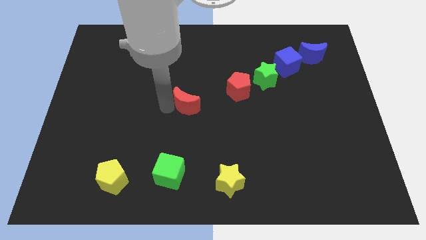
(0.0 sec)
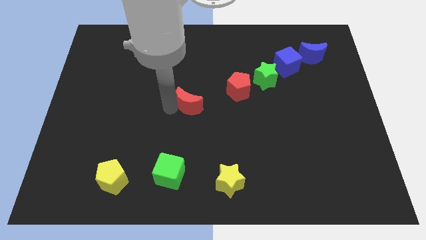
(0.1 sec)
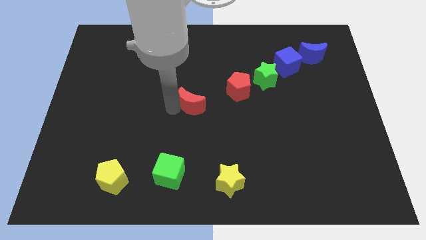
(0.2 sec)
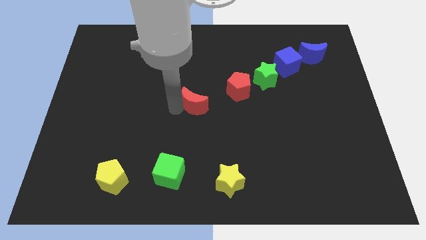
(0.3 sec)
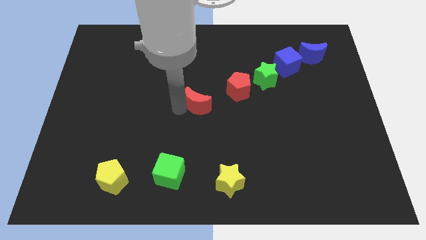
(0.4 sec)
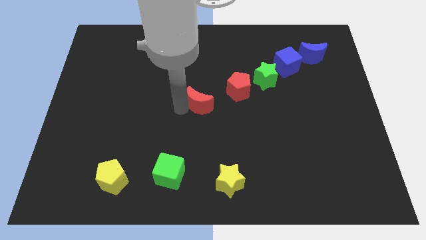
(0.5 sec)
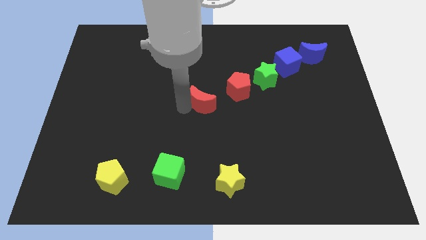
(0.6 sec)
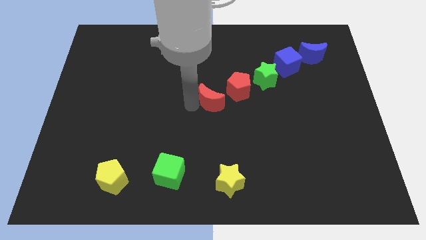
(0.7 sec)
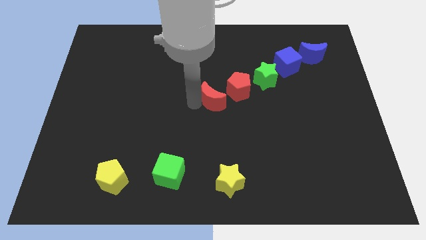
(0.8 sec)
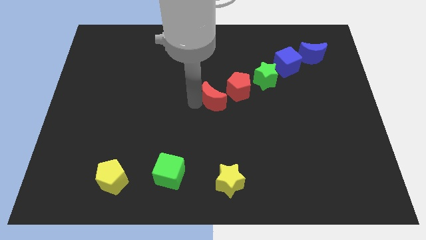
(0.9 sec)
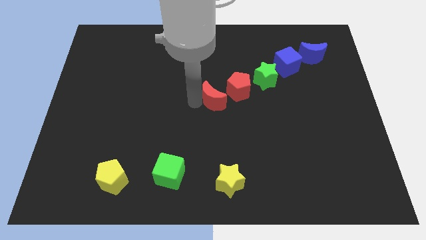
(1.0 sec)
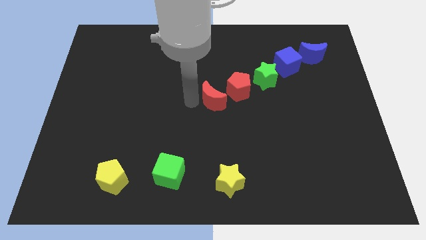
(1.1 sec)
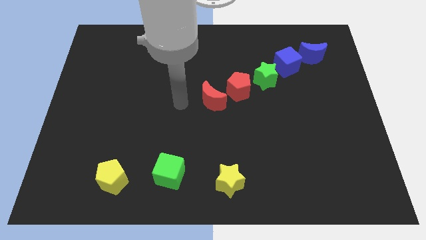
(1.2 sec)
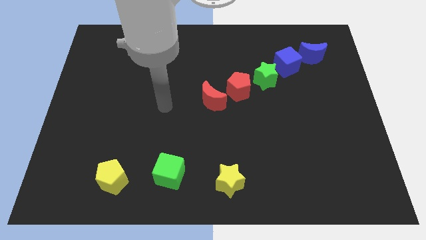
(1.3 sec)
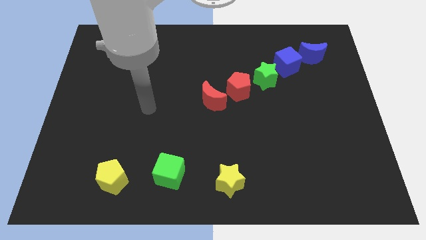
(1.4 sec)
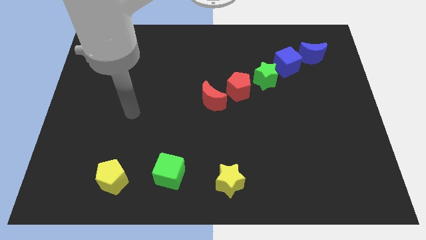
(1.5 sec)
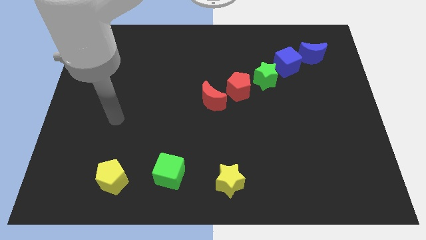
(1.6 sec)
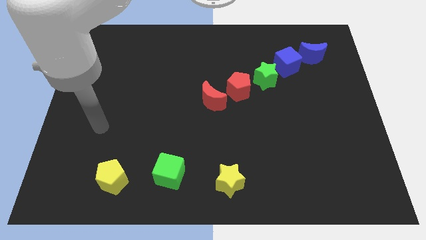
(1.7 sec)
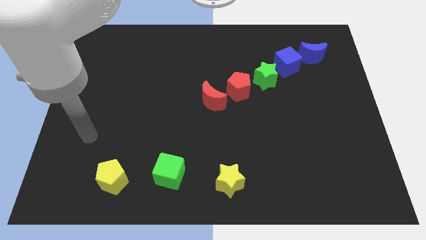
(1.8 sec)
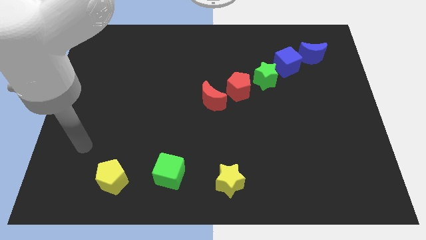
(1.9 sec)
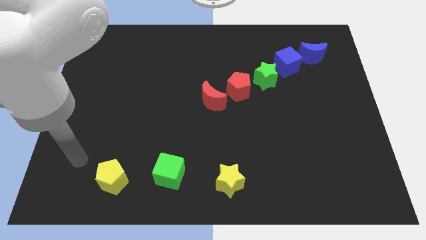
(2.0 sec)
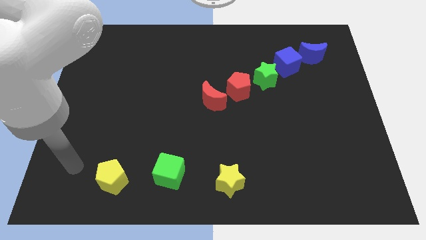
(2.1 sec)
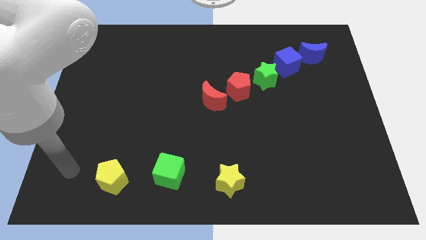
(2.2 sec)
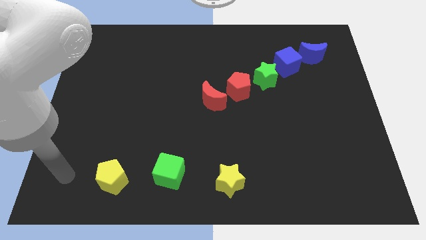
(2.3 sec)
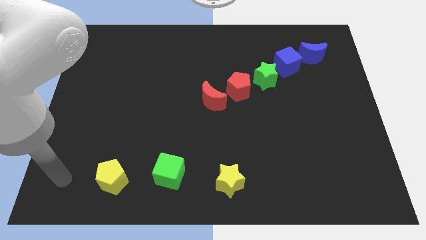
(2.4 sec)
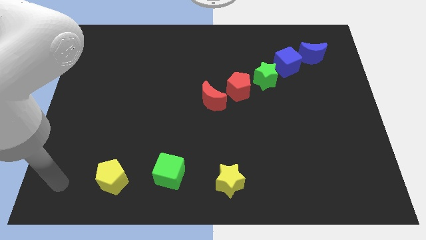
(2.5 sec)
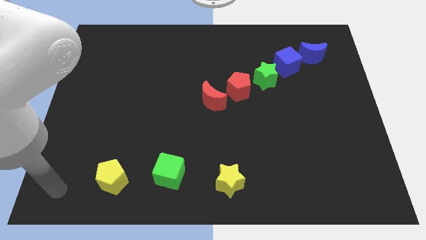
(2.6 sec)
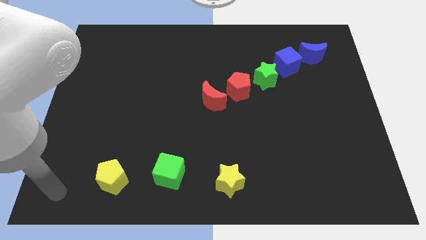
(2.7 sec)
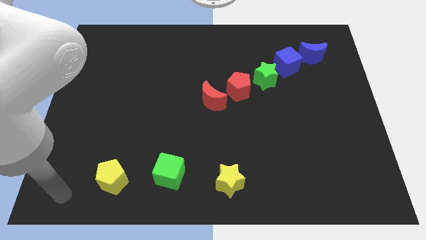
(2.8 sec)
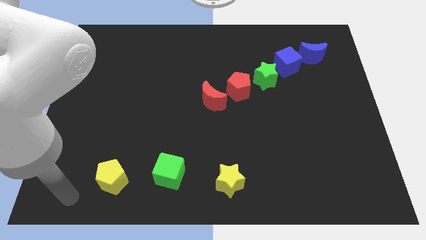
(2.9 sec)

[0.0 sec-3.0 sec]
place the red moon diagonally top right to yellow pentagon

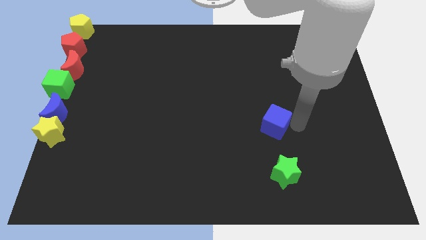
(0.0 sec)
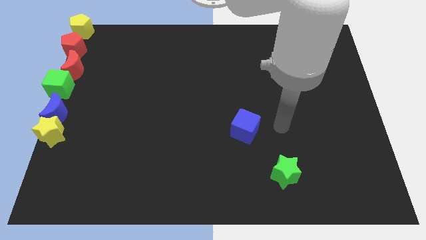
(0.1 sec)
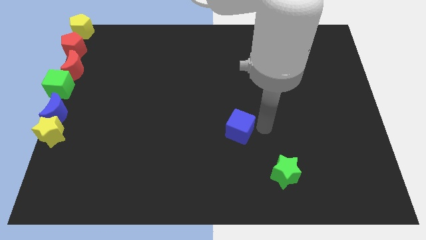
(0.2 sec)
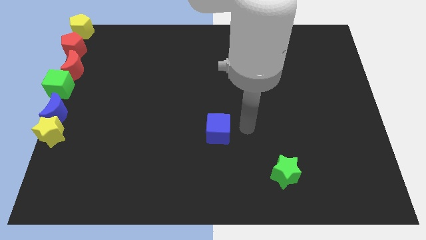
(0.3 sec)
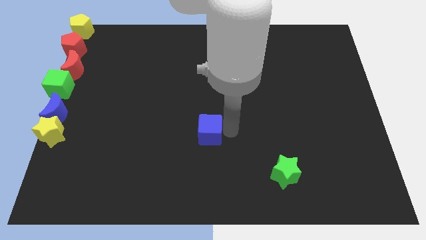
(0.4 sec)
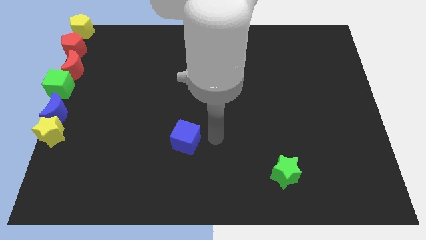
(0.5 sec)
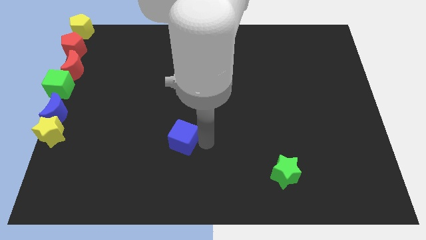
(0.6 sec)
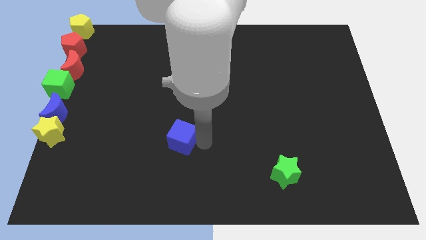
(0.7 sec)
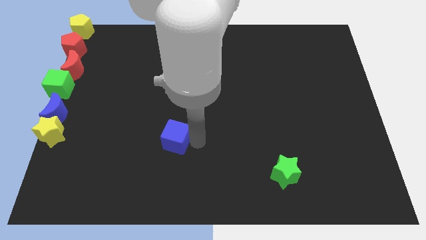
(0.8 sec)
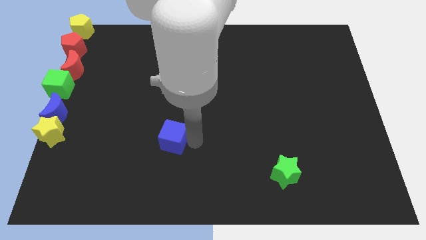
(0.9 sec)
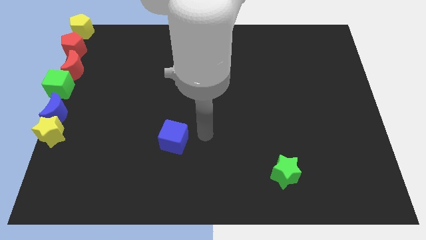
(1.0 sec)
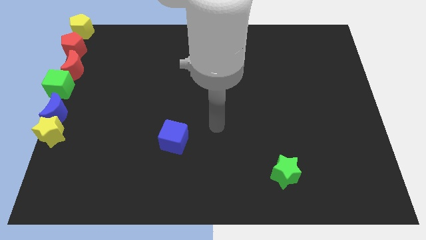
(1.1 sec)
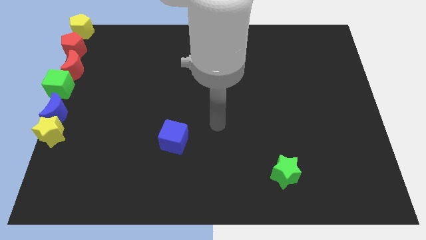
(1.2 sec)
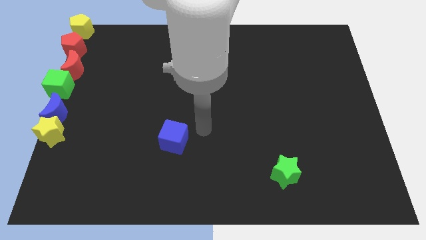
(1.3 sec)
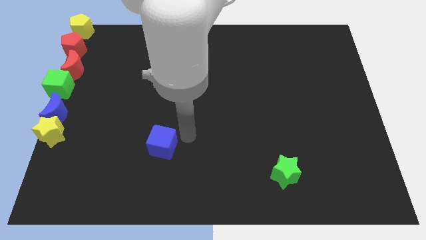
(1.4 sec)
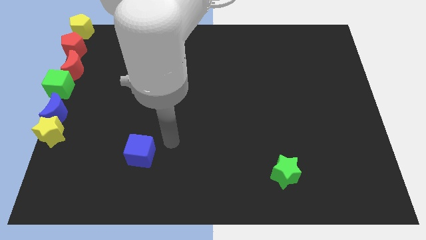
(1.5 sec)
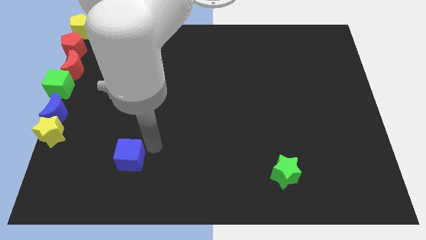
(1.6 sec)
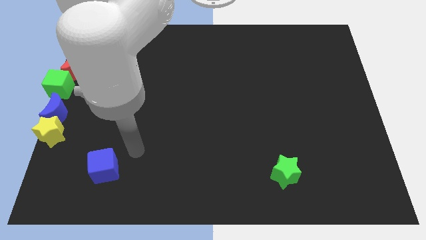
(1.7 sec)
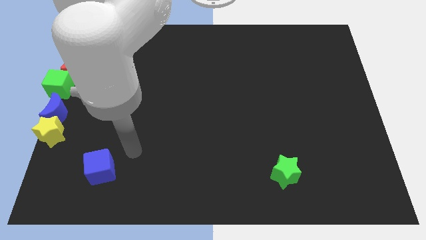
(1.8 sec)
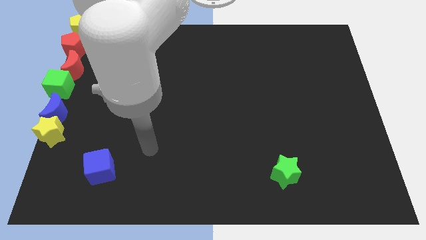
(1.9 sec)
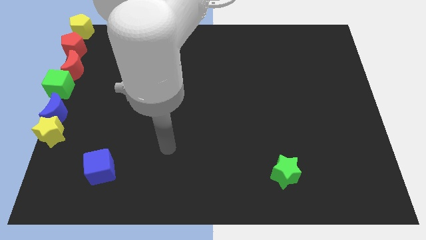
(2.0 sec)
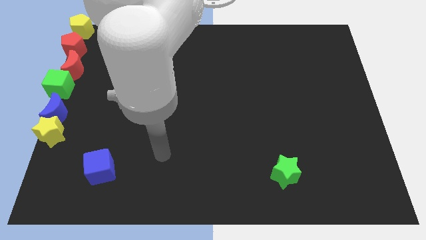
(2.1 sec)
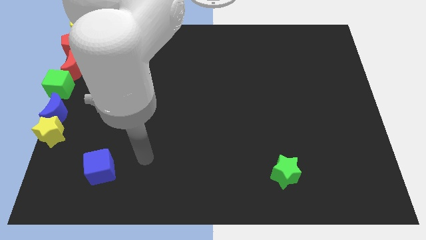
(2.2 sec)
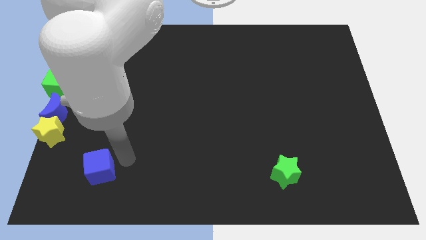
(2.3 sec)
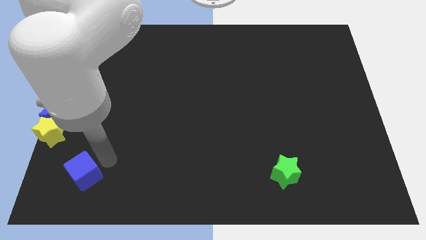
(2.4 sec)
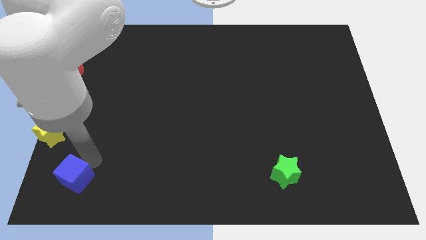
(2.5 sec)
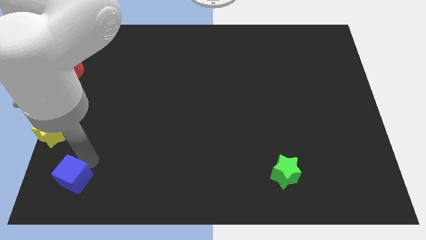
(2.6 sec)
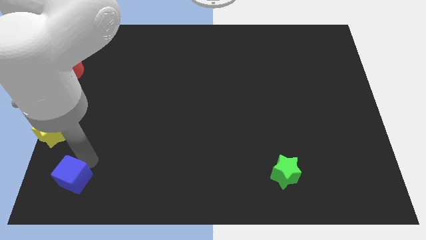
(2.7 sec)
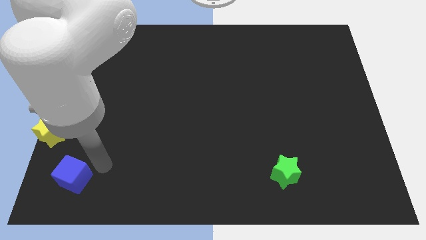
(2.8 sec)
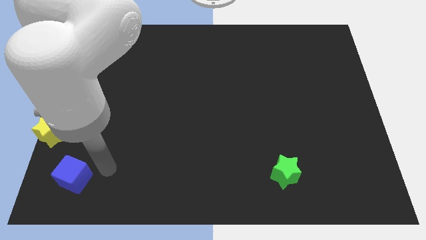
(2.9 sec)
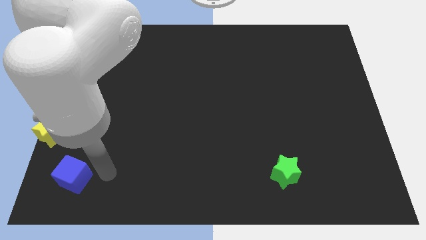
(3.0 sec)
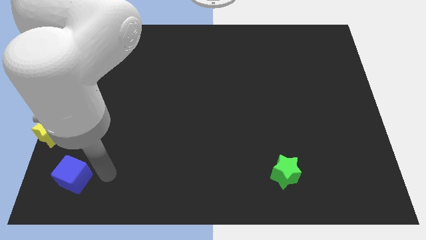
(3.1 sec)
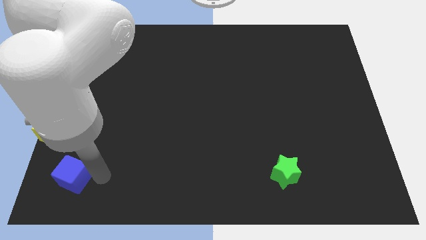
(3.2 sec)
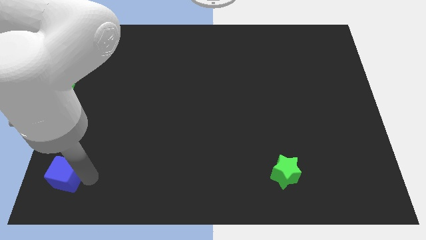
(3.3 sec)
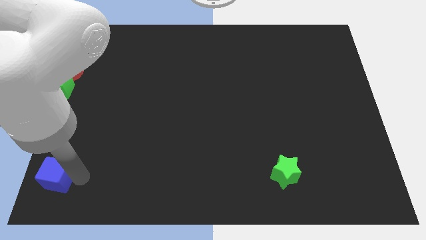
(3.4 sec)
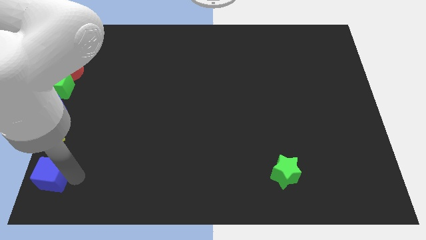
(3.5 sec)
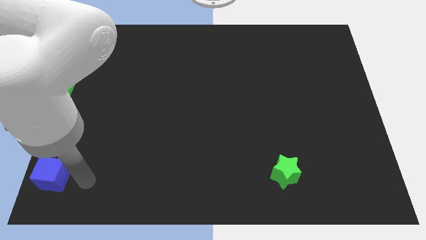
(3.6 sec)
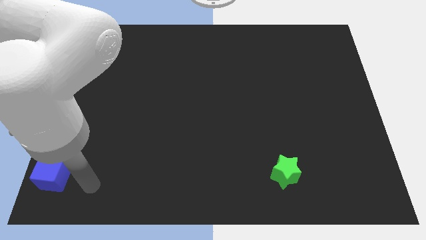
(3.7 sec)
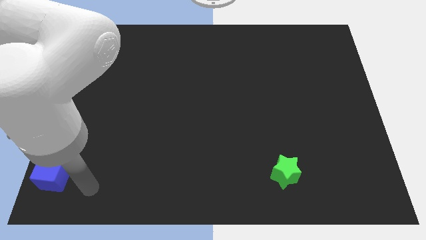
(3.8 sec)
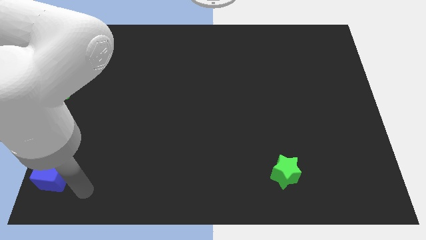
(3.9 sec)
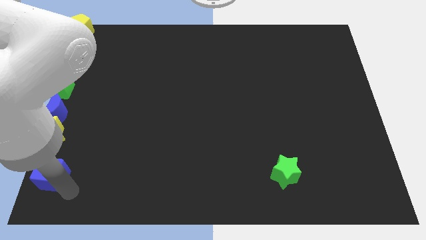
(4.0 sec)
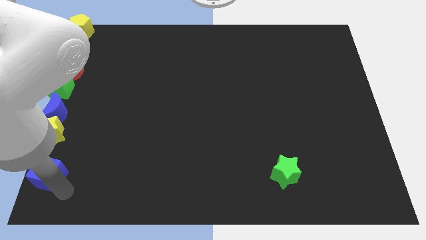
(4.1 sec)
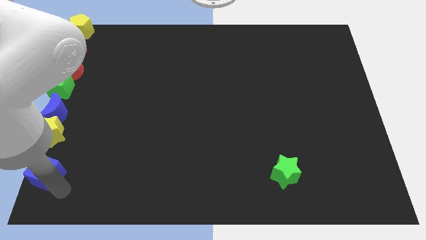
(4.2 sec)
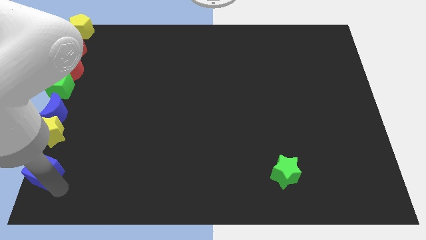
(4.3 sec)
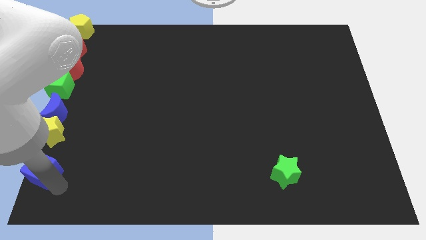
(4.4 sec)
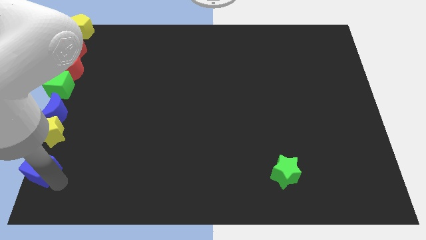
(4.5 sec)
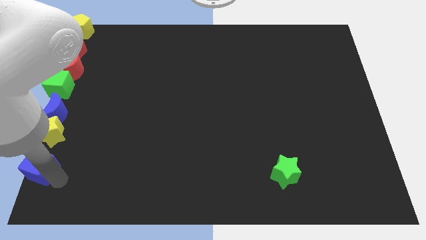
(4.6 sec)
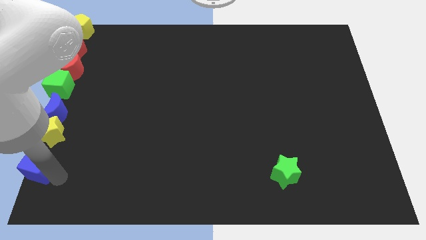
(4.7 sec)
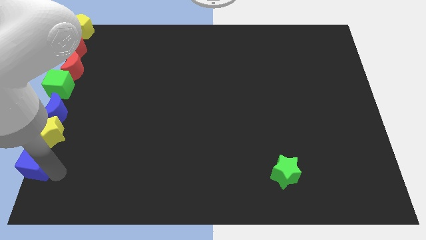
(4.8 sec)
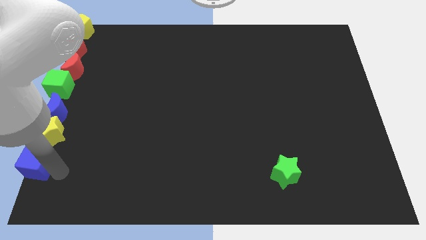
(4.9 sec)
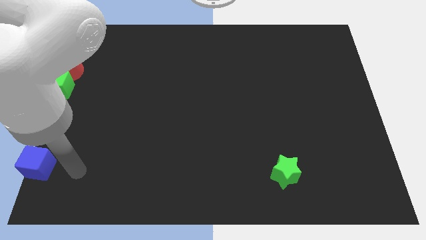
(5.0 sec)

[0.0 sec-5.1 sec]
move the blue cube below the yellow star

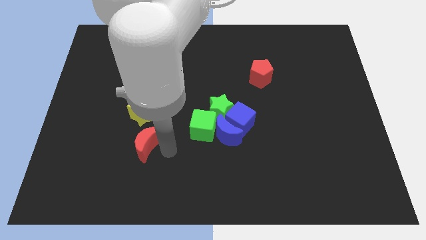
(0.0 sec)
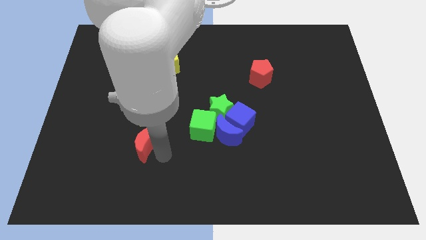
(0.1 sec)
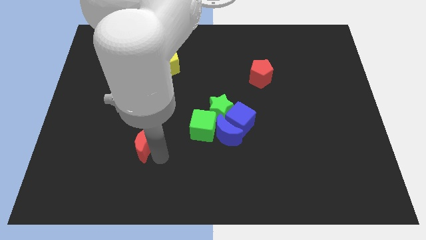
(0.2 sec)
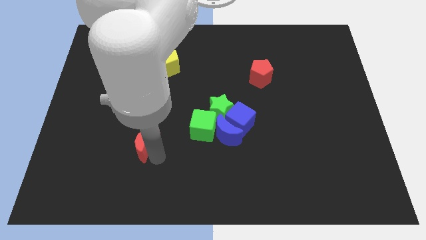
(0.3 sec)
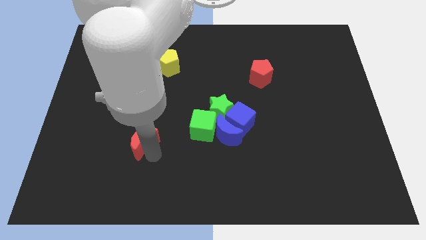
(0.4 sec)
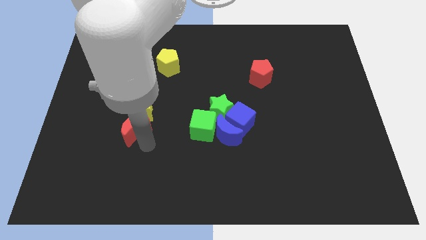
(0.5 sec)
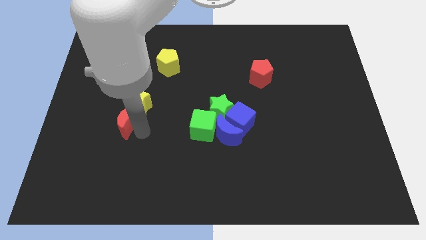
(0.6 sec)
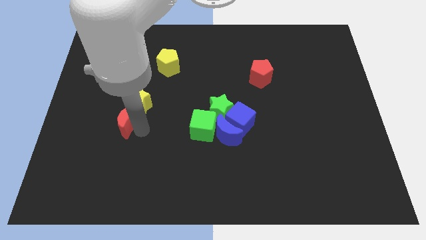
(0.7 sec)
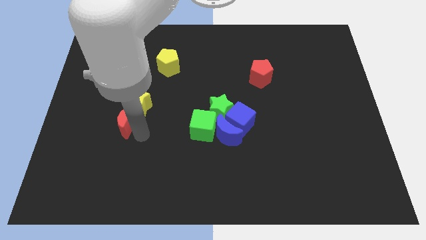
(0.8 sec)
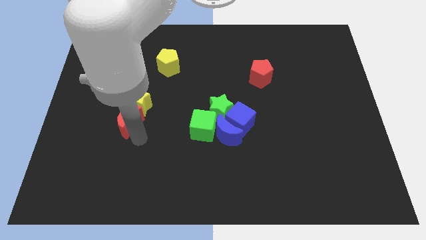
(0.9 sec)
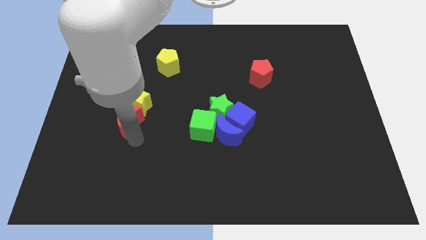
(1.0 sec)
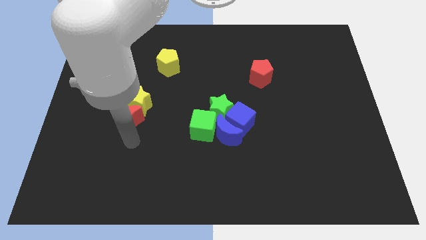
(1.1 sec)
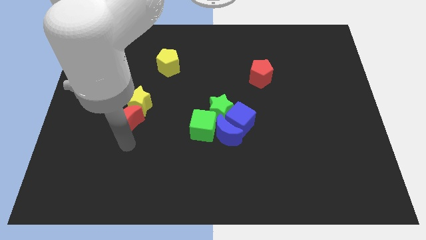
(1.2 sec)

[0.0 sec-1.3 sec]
move the red crescent into the bottom side of the yellow star
